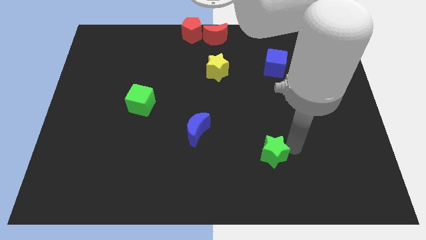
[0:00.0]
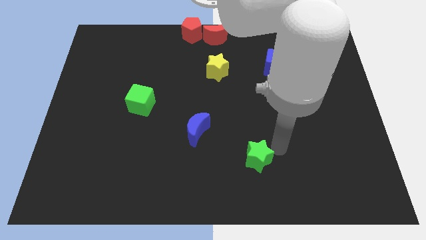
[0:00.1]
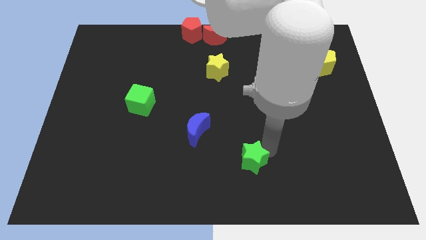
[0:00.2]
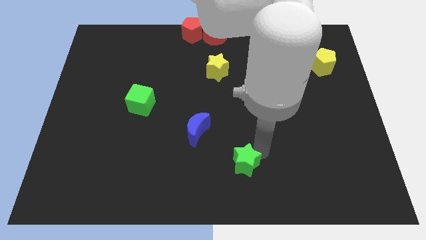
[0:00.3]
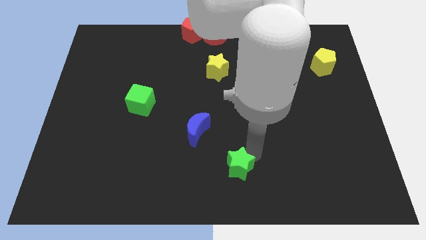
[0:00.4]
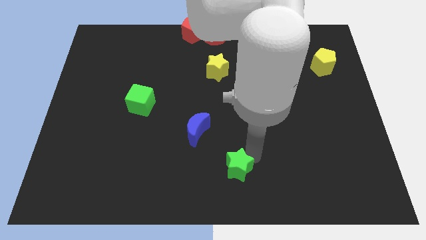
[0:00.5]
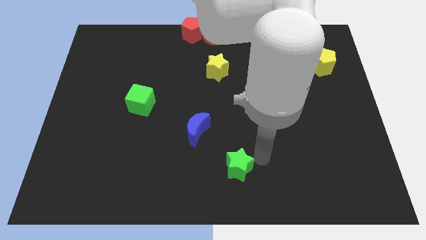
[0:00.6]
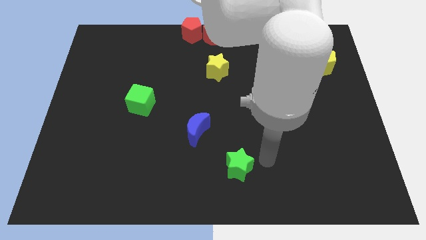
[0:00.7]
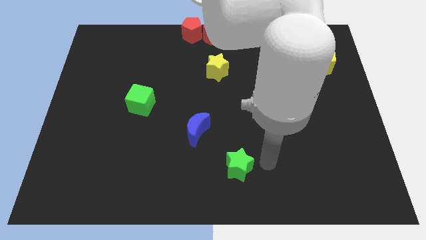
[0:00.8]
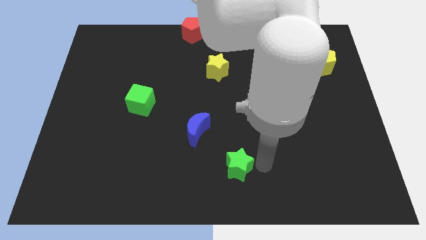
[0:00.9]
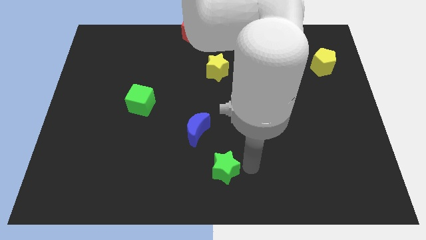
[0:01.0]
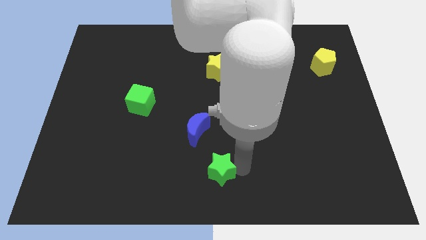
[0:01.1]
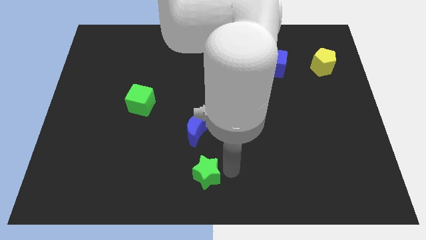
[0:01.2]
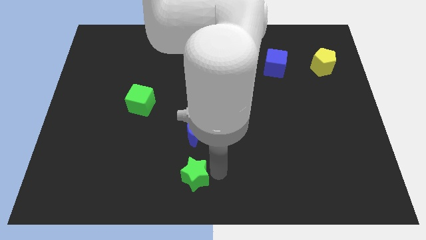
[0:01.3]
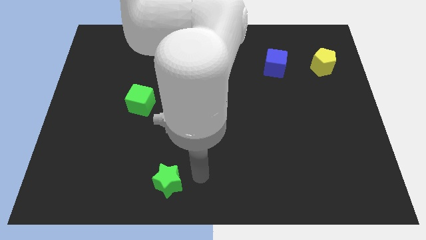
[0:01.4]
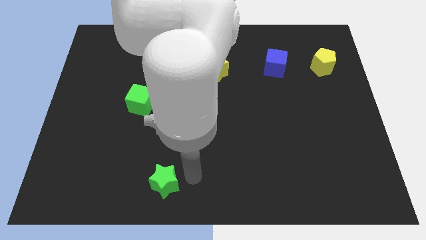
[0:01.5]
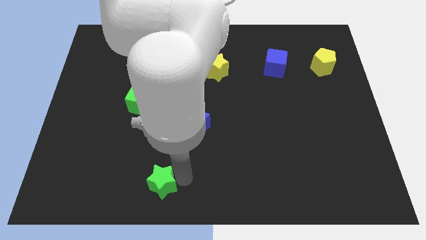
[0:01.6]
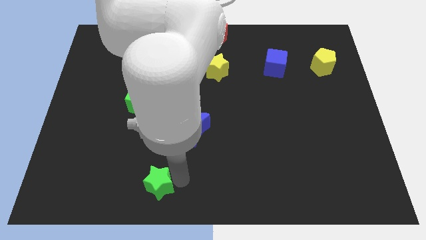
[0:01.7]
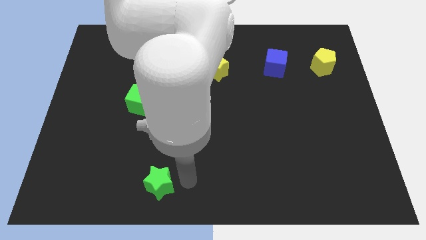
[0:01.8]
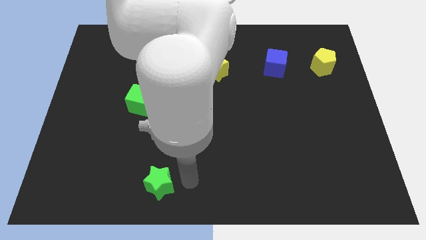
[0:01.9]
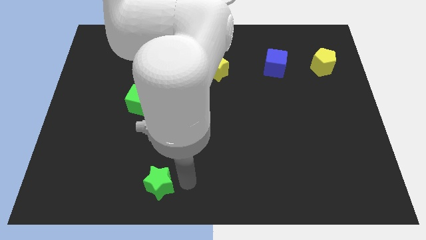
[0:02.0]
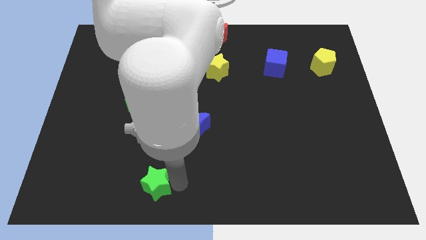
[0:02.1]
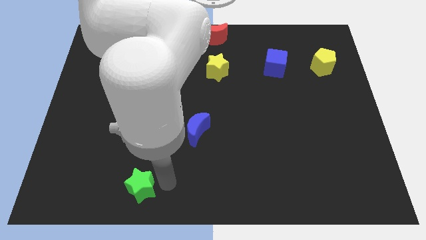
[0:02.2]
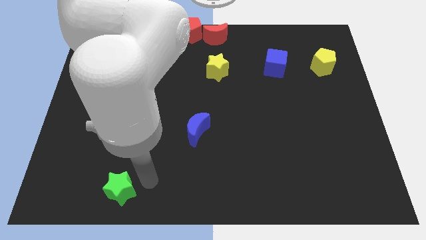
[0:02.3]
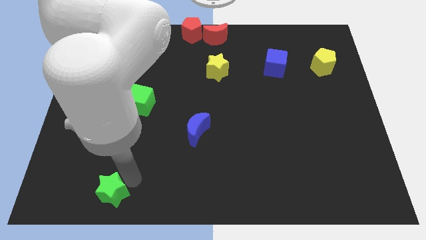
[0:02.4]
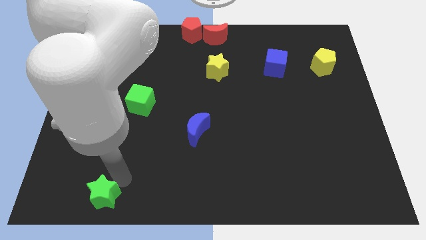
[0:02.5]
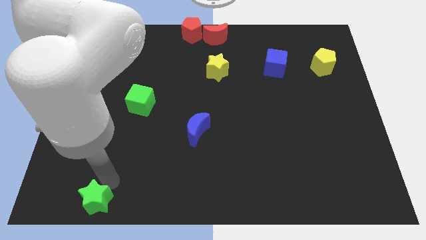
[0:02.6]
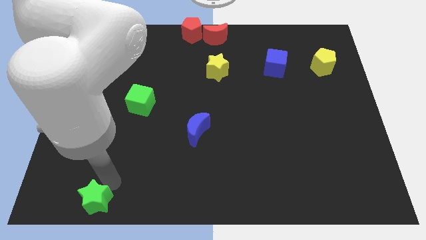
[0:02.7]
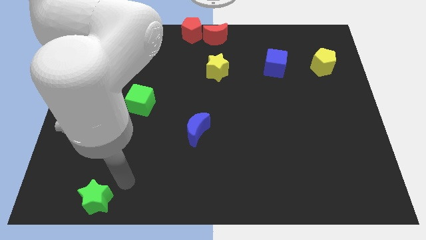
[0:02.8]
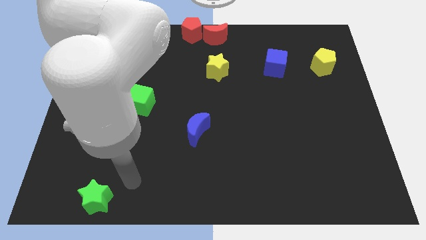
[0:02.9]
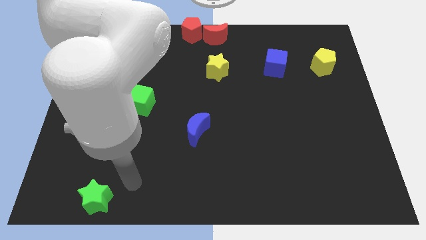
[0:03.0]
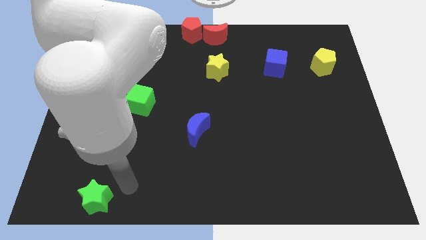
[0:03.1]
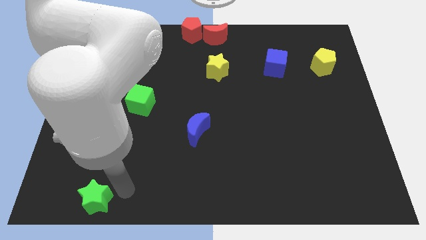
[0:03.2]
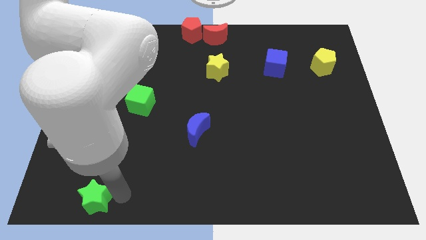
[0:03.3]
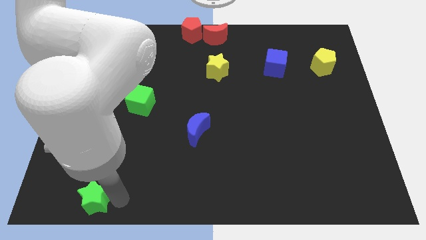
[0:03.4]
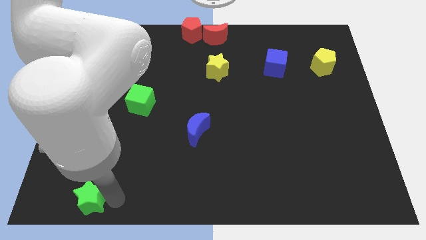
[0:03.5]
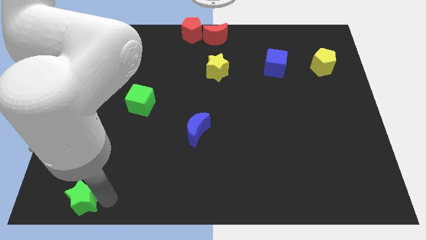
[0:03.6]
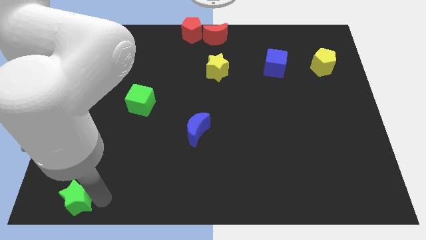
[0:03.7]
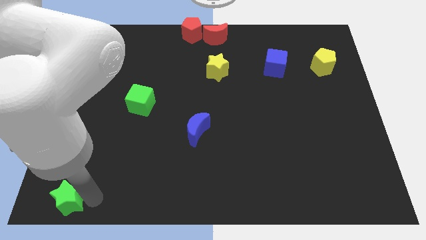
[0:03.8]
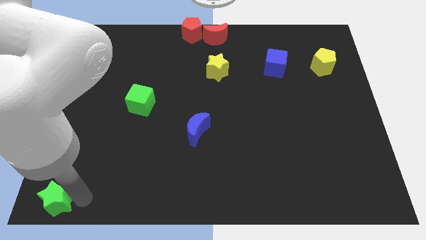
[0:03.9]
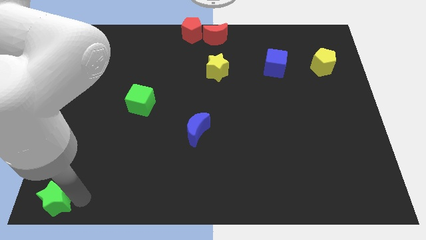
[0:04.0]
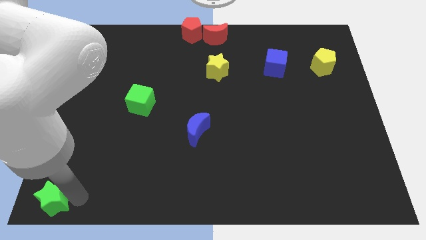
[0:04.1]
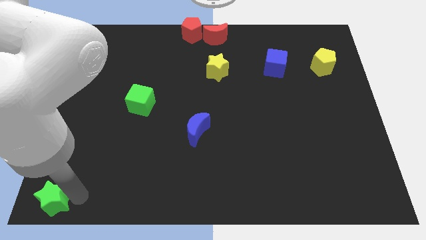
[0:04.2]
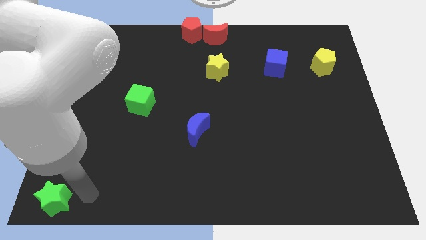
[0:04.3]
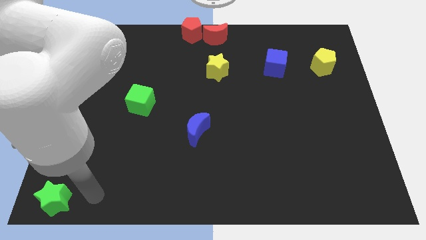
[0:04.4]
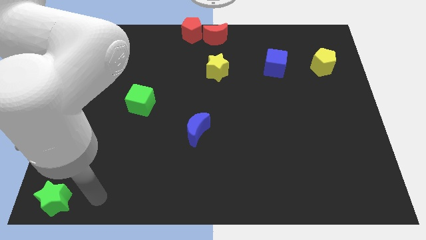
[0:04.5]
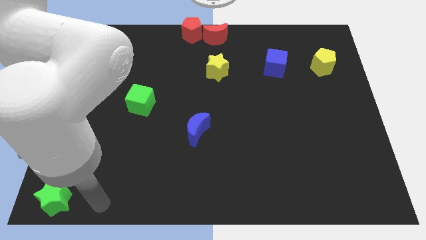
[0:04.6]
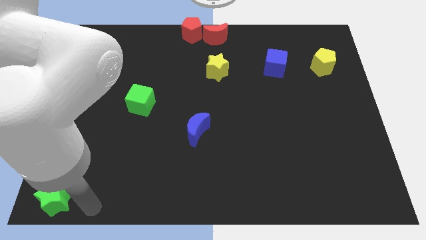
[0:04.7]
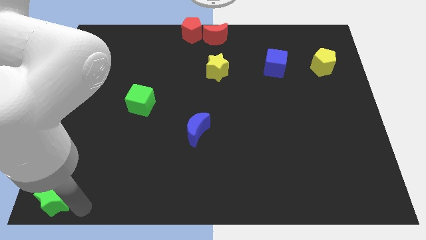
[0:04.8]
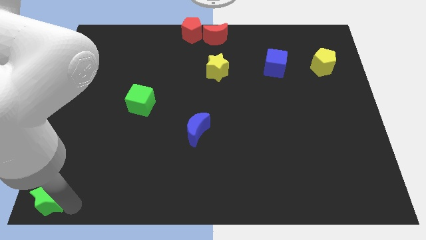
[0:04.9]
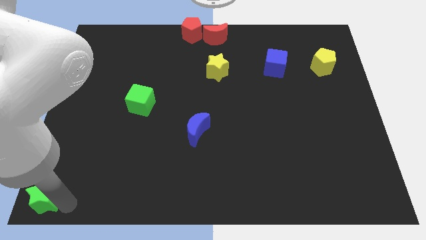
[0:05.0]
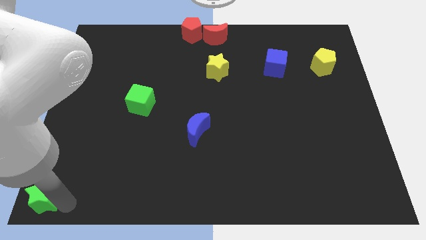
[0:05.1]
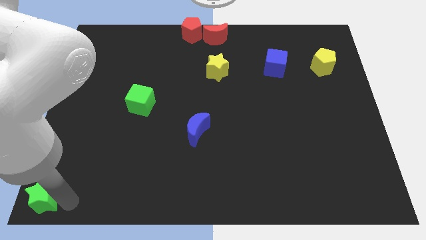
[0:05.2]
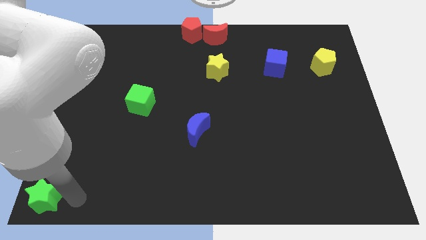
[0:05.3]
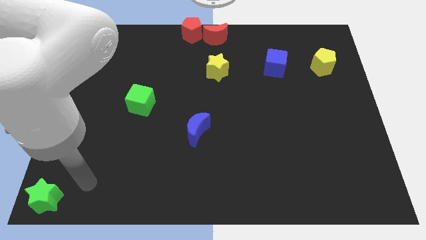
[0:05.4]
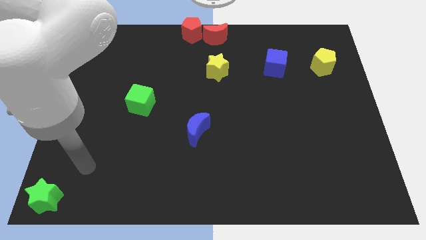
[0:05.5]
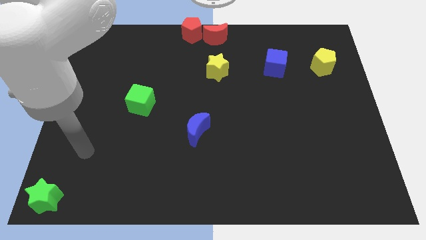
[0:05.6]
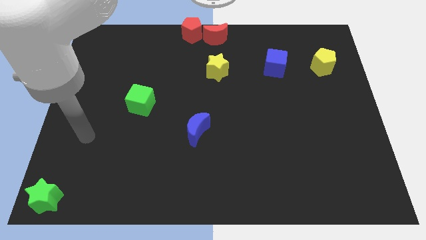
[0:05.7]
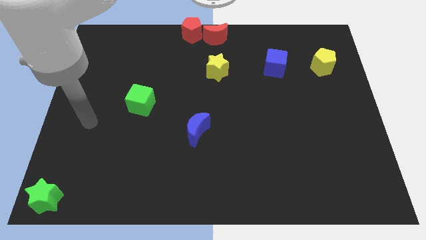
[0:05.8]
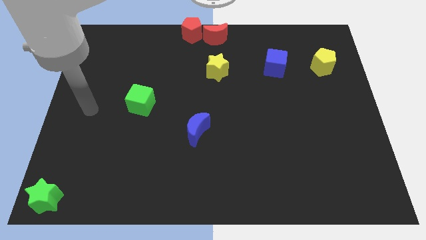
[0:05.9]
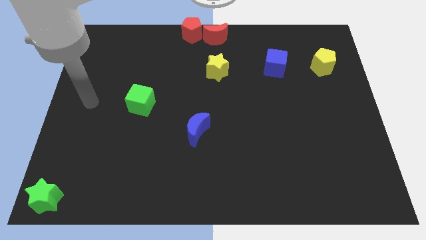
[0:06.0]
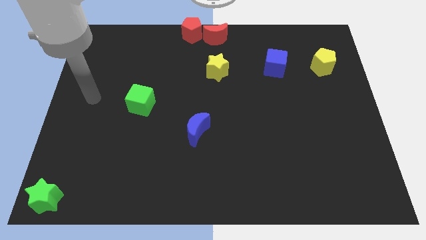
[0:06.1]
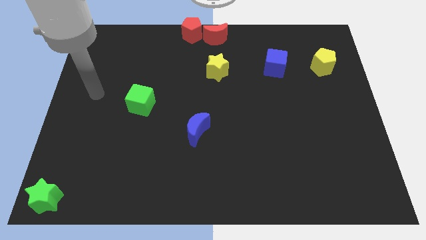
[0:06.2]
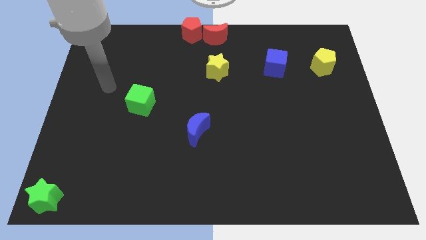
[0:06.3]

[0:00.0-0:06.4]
move the green star to the bottom right corner

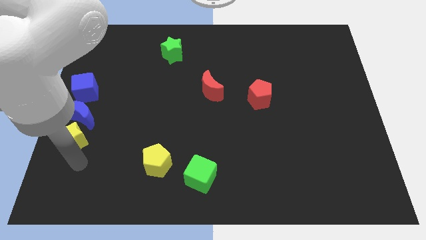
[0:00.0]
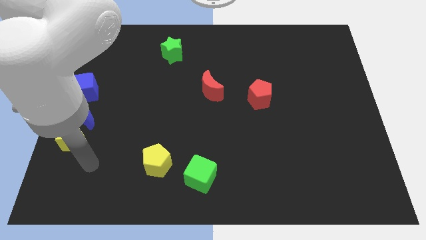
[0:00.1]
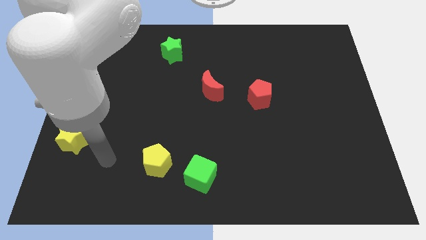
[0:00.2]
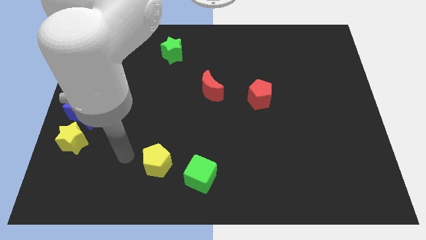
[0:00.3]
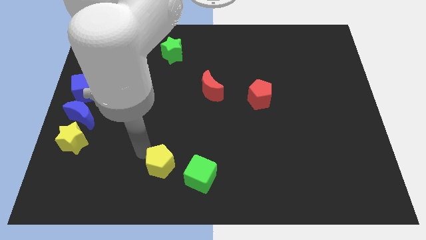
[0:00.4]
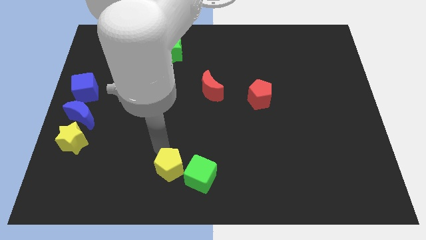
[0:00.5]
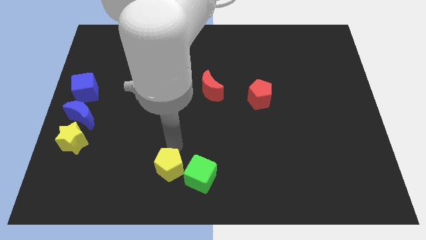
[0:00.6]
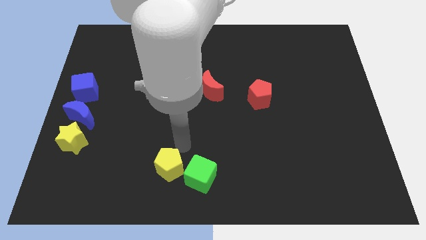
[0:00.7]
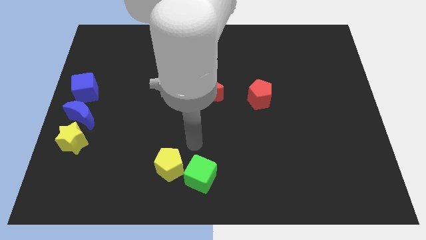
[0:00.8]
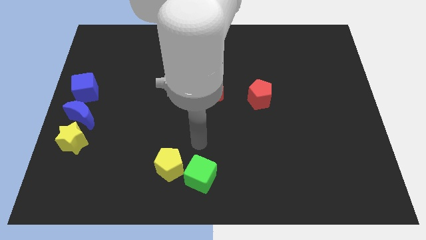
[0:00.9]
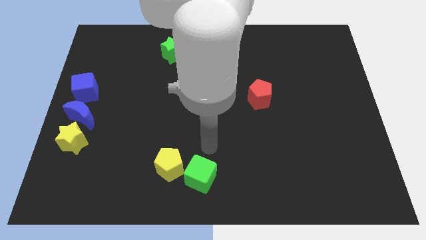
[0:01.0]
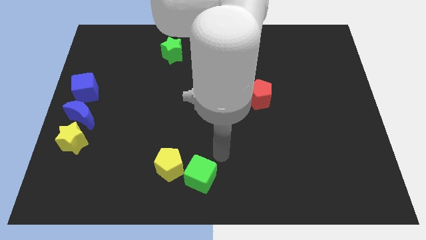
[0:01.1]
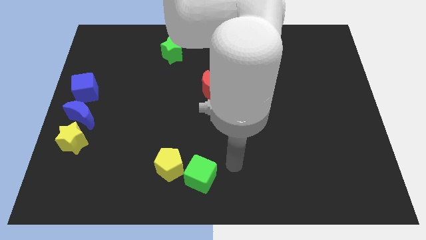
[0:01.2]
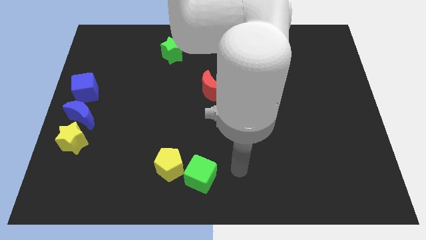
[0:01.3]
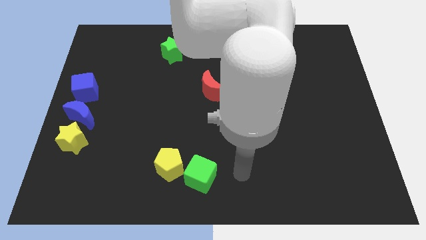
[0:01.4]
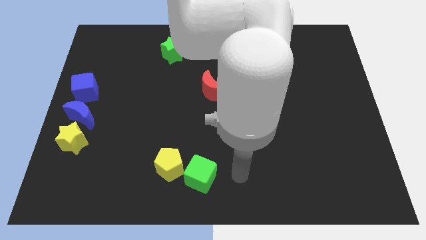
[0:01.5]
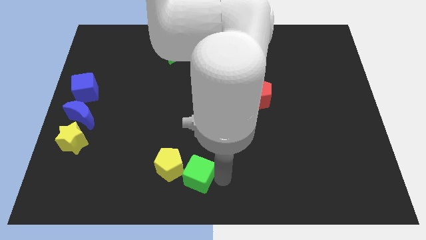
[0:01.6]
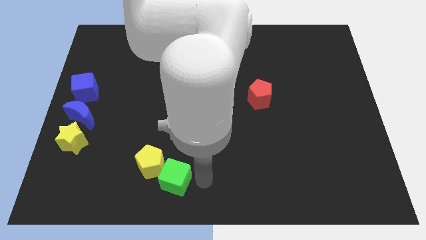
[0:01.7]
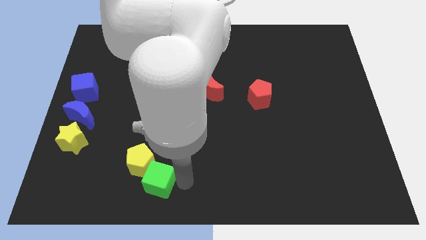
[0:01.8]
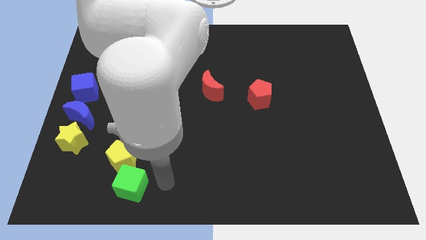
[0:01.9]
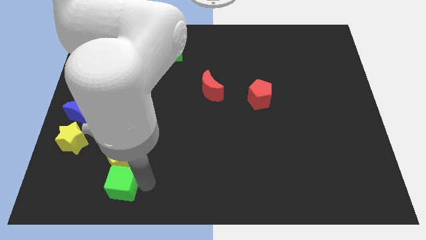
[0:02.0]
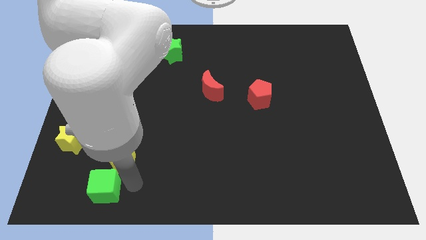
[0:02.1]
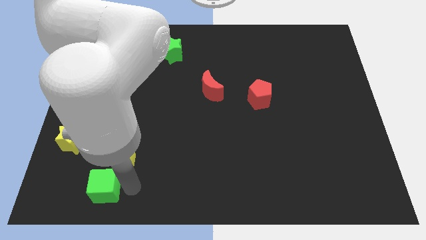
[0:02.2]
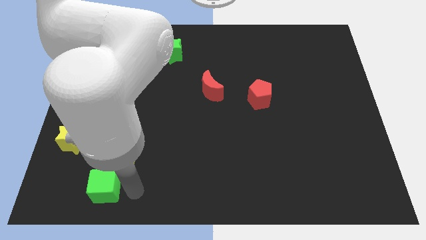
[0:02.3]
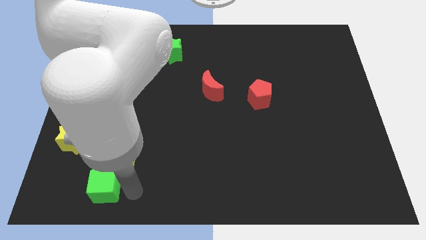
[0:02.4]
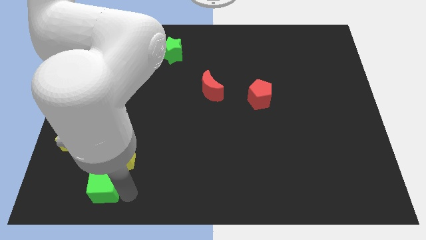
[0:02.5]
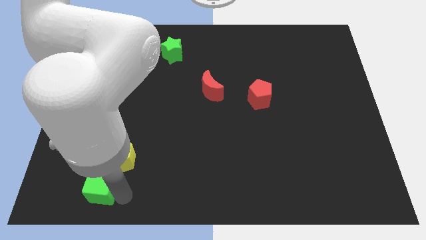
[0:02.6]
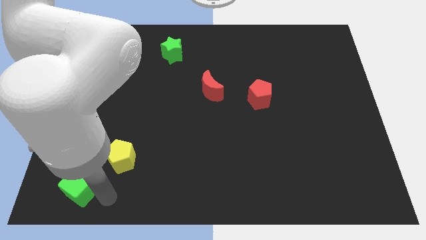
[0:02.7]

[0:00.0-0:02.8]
push green cube to the left
